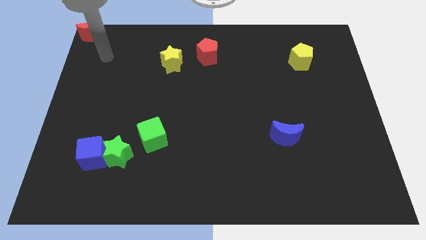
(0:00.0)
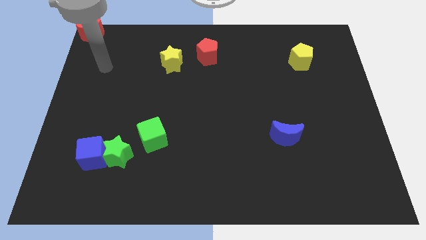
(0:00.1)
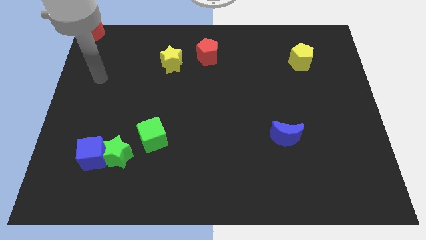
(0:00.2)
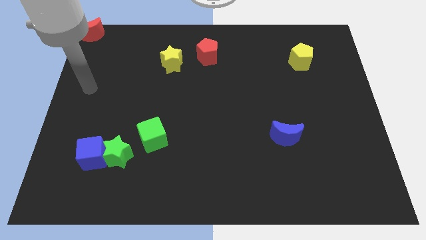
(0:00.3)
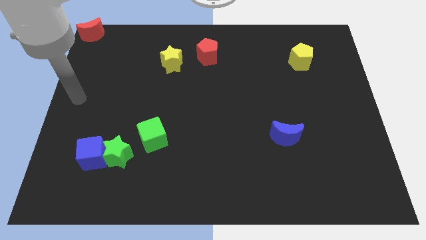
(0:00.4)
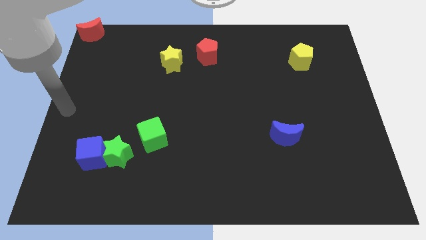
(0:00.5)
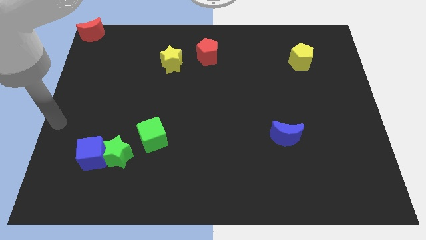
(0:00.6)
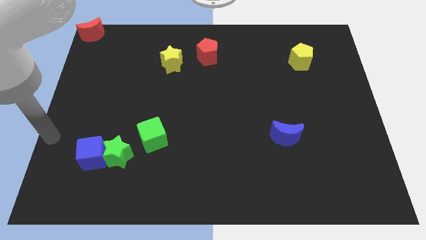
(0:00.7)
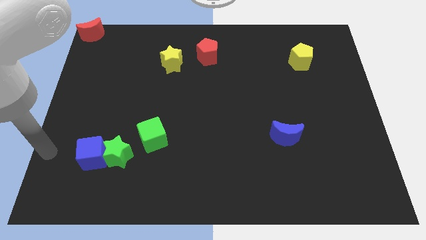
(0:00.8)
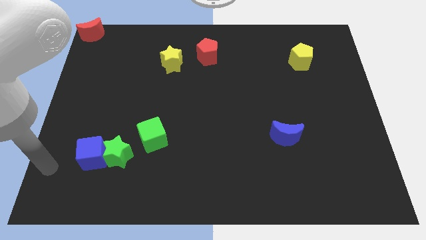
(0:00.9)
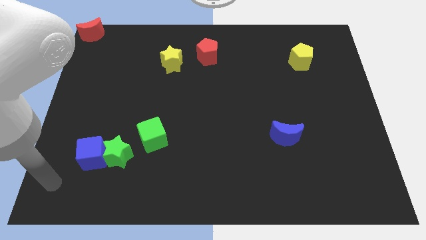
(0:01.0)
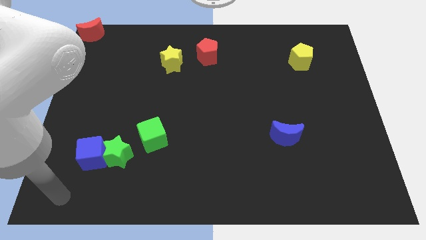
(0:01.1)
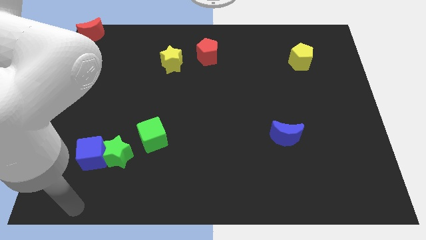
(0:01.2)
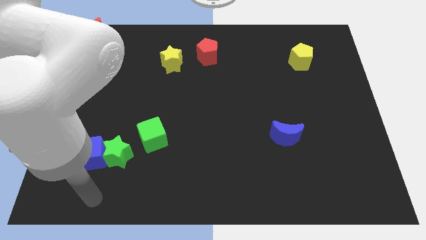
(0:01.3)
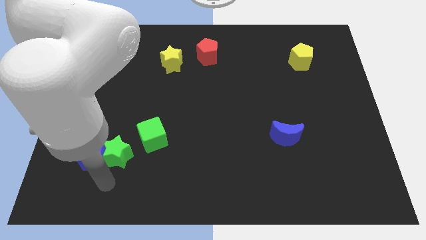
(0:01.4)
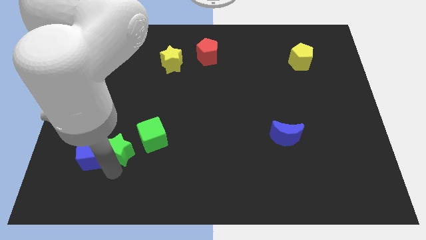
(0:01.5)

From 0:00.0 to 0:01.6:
place the arm under the green star

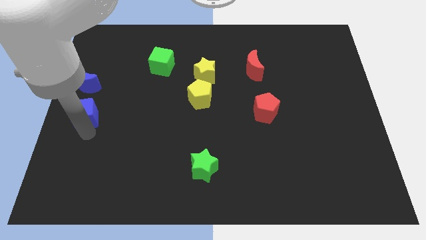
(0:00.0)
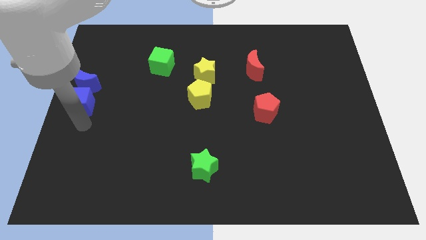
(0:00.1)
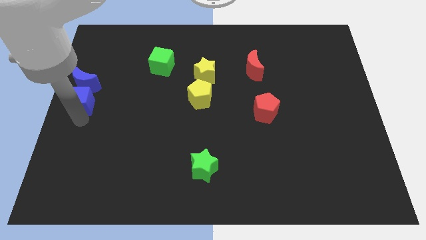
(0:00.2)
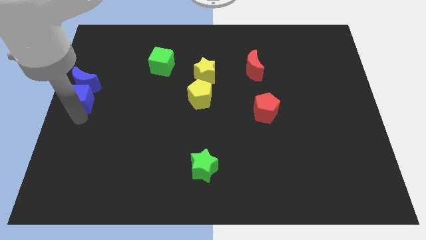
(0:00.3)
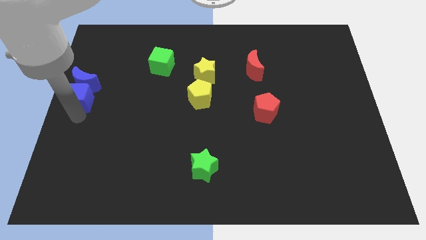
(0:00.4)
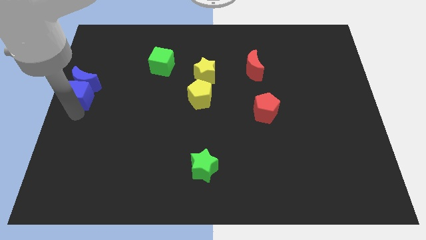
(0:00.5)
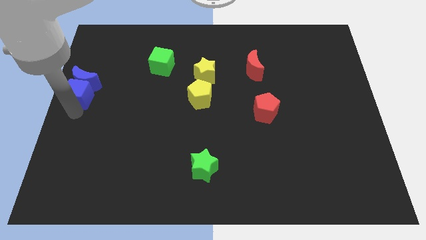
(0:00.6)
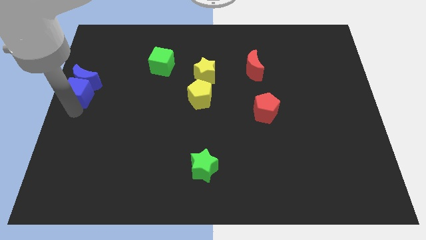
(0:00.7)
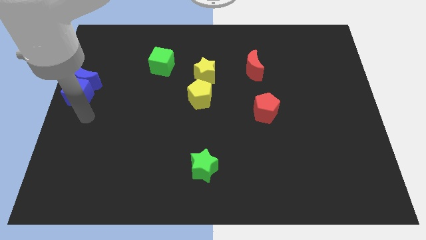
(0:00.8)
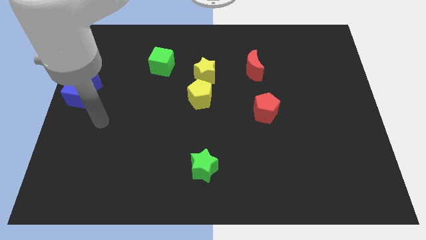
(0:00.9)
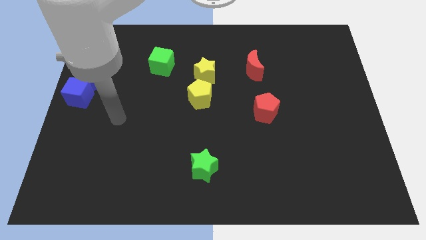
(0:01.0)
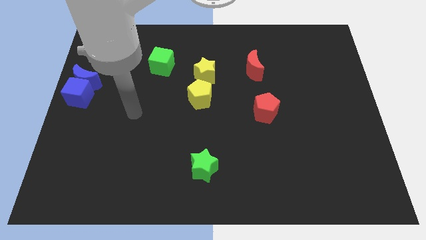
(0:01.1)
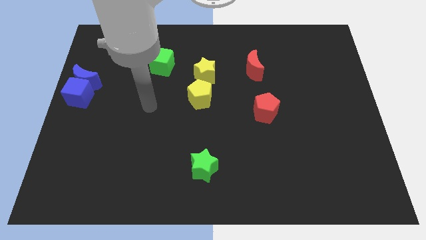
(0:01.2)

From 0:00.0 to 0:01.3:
push the blue cube into the blue moon

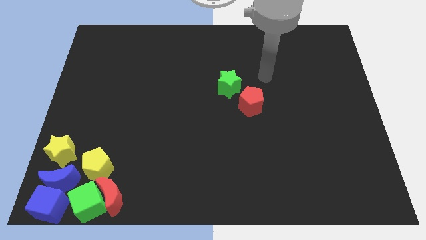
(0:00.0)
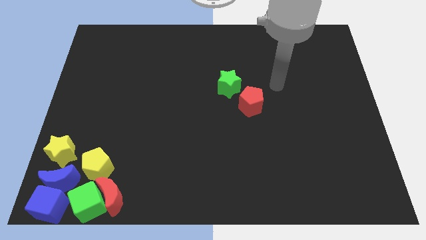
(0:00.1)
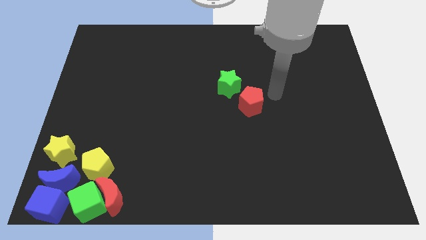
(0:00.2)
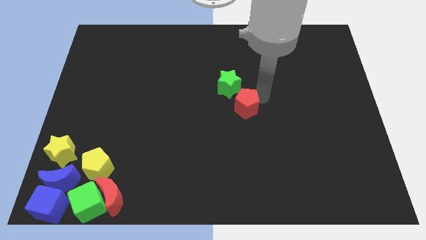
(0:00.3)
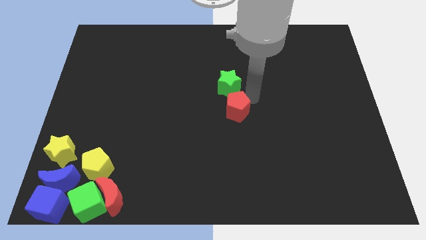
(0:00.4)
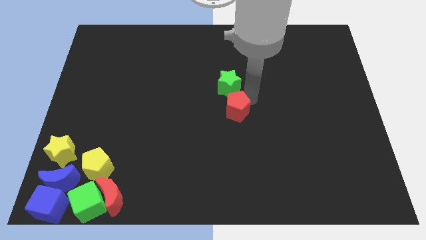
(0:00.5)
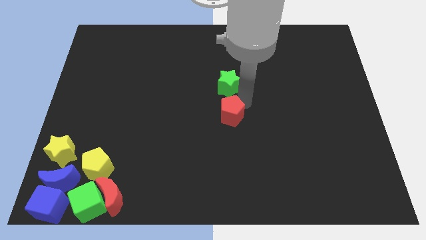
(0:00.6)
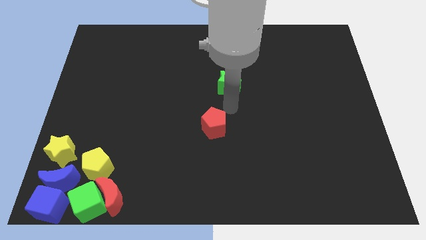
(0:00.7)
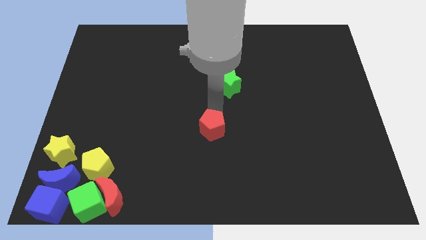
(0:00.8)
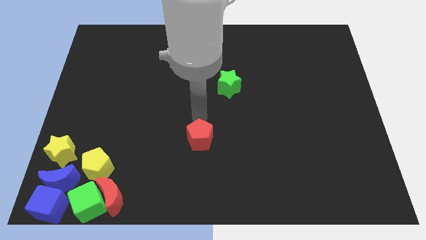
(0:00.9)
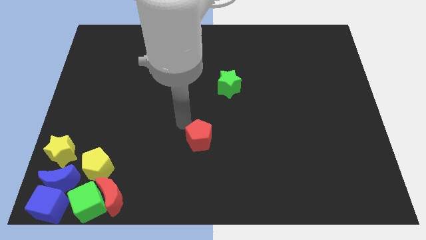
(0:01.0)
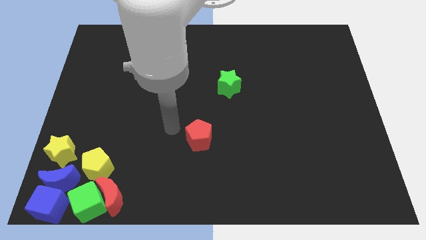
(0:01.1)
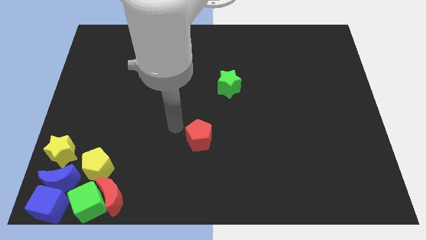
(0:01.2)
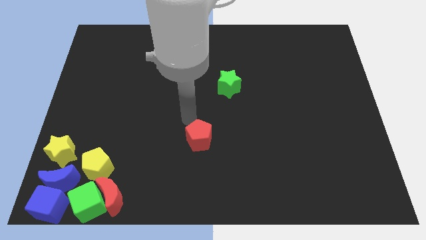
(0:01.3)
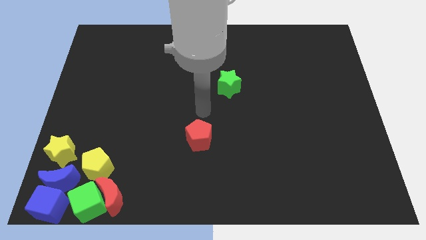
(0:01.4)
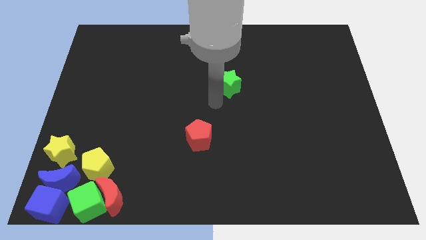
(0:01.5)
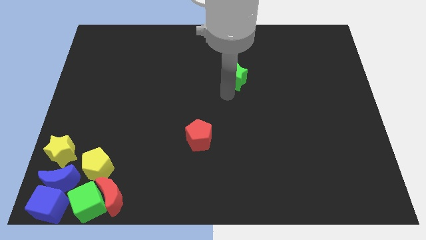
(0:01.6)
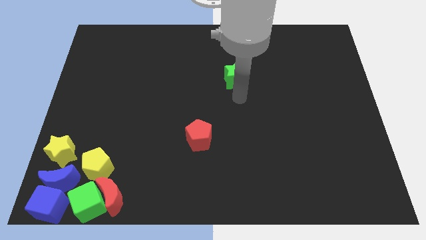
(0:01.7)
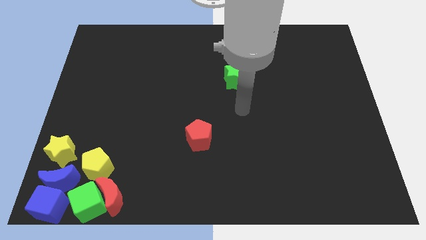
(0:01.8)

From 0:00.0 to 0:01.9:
move red pentagon and the green star away from each other

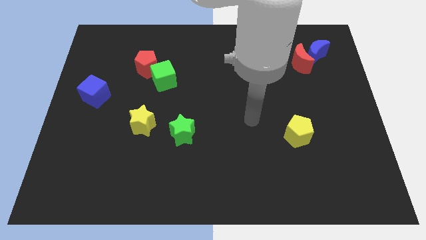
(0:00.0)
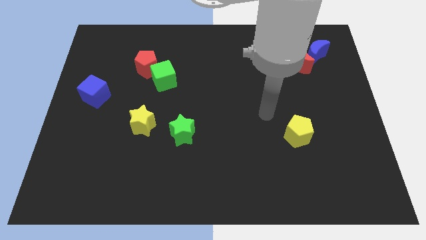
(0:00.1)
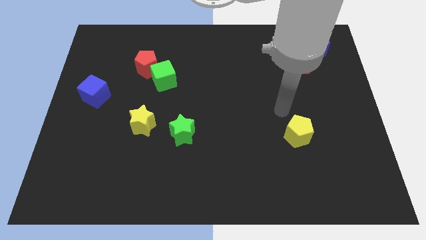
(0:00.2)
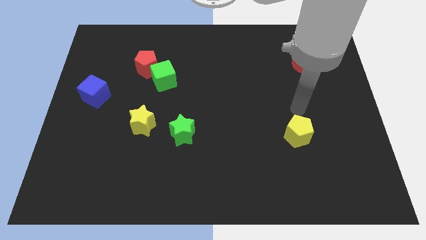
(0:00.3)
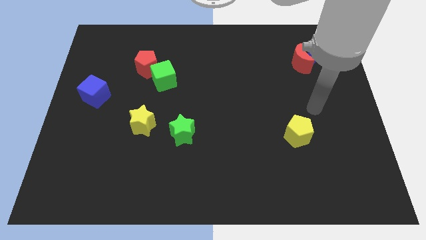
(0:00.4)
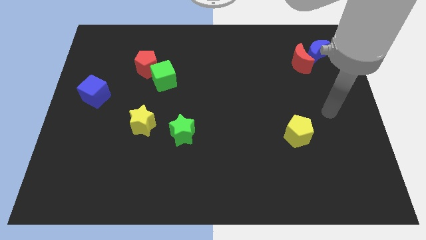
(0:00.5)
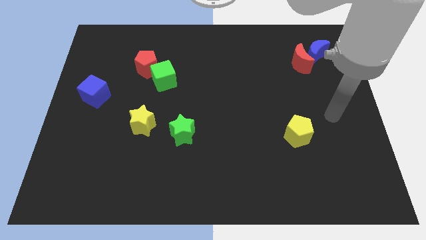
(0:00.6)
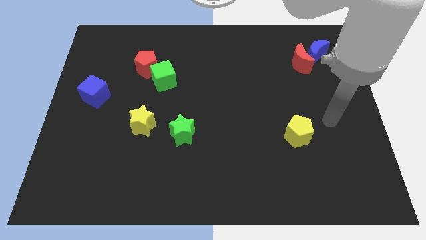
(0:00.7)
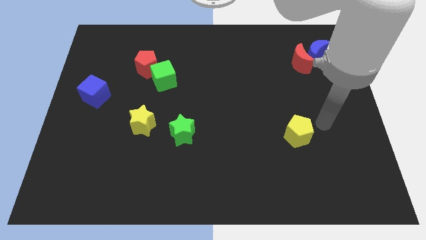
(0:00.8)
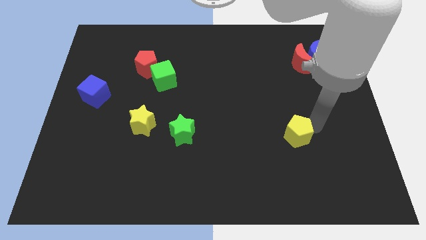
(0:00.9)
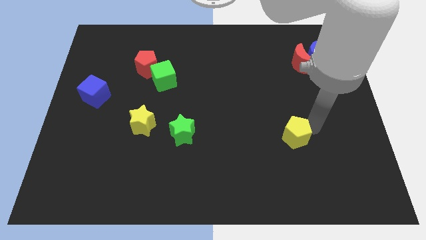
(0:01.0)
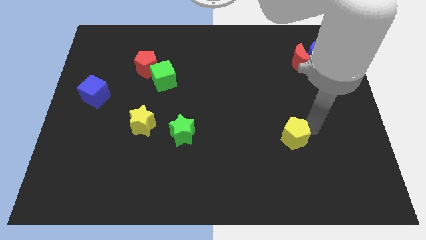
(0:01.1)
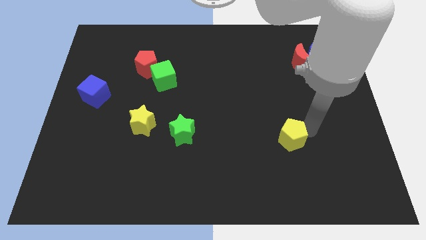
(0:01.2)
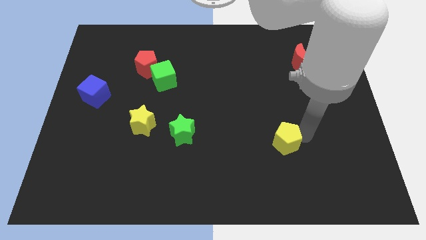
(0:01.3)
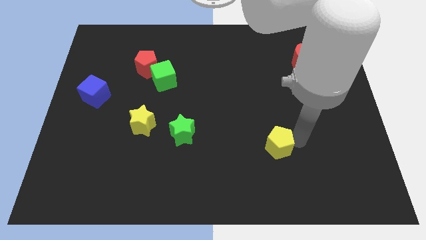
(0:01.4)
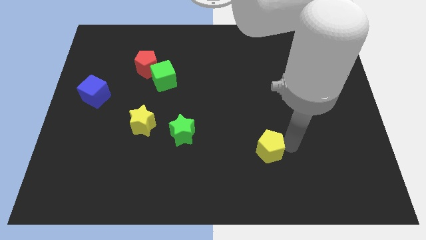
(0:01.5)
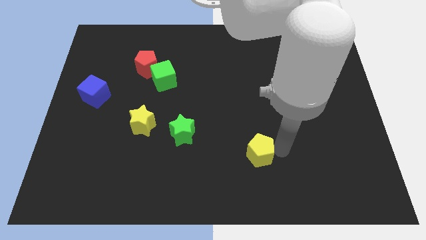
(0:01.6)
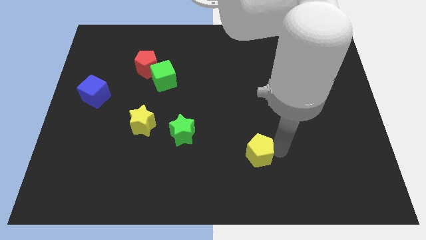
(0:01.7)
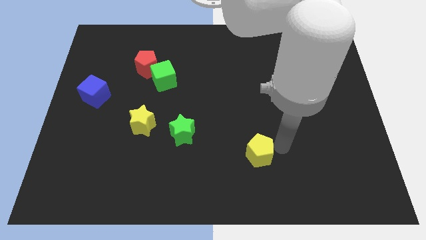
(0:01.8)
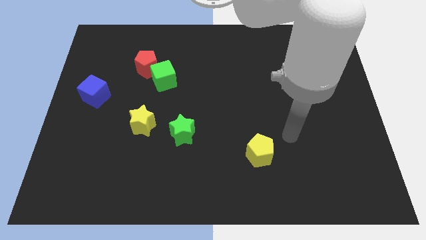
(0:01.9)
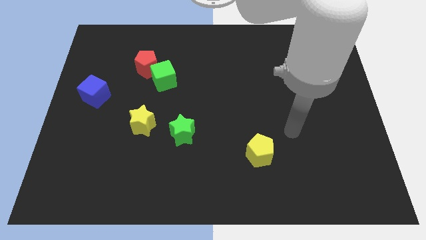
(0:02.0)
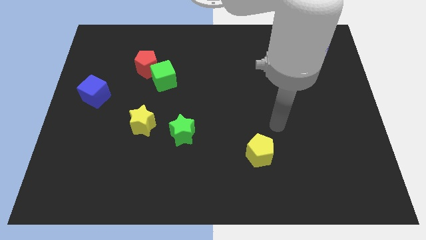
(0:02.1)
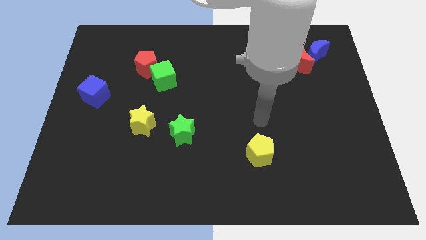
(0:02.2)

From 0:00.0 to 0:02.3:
push the yellow pentagon towards the bottom side

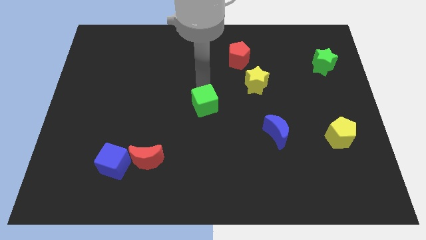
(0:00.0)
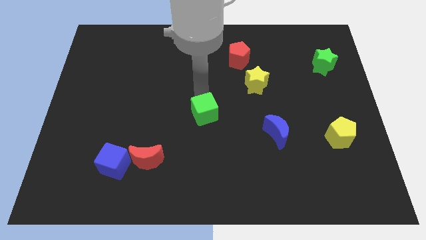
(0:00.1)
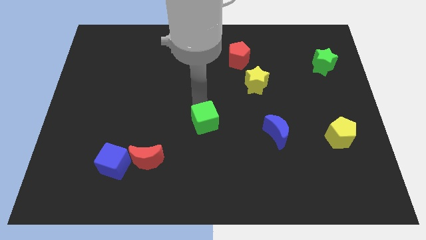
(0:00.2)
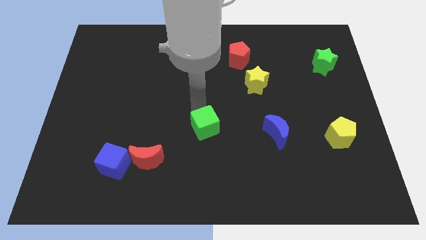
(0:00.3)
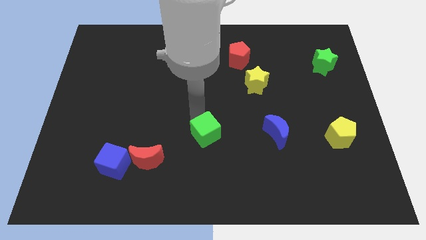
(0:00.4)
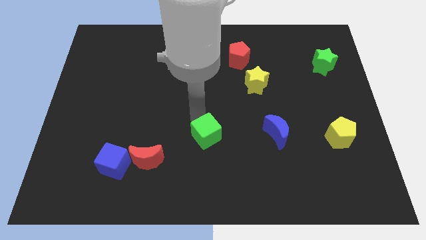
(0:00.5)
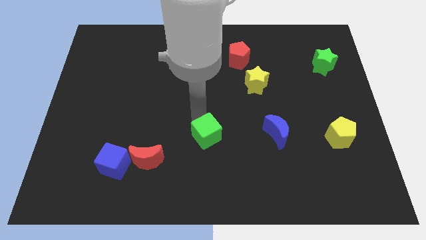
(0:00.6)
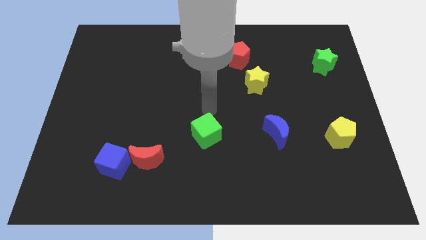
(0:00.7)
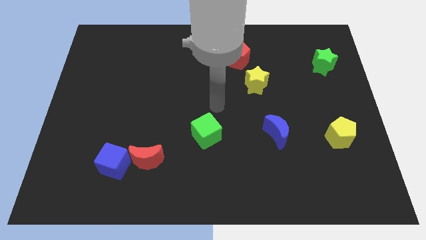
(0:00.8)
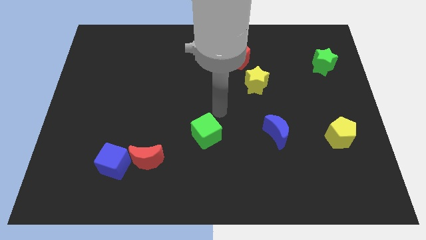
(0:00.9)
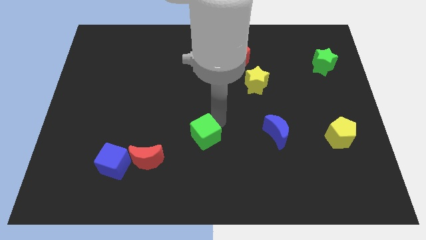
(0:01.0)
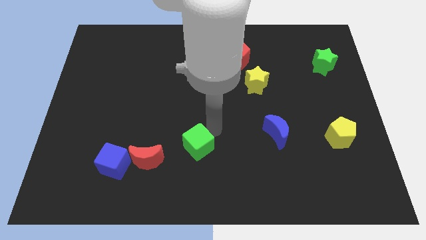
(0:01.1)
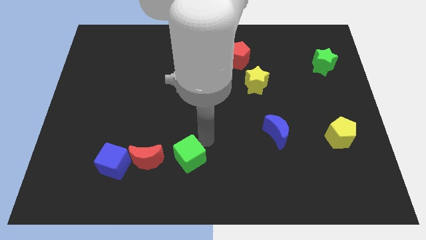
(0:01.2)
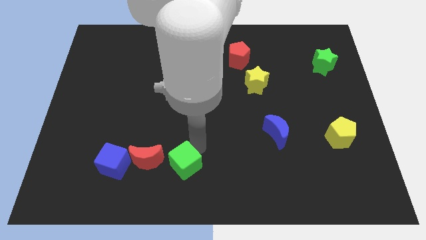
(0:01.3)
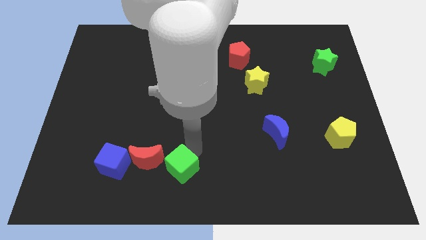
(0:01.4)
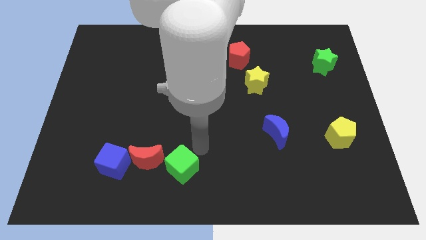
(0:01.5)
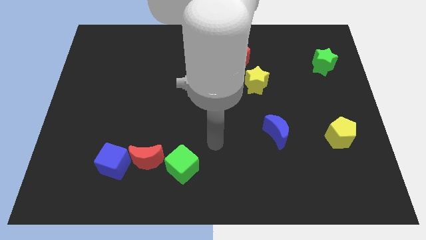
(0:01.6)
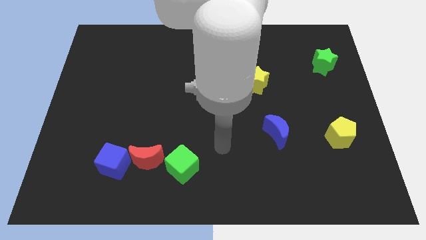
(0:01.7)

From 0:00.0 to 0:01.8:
place the green cube to the right of red moon
